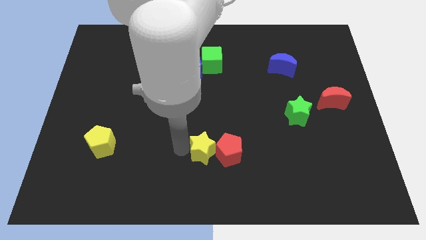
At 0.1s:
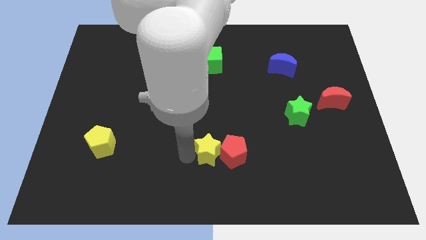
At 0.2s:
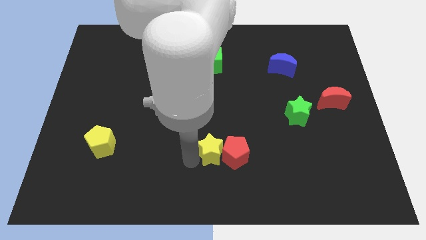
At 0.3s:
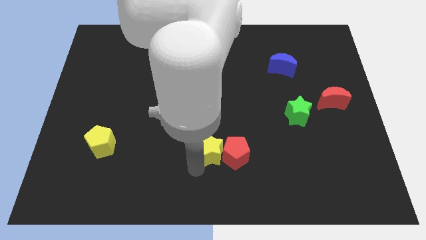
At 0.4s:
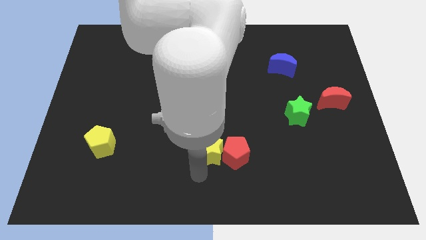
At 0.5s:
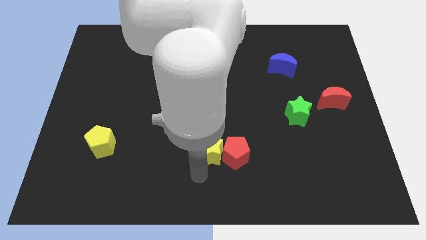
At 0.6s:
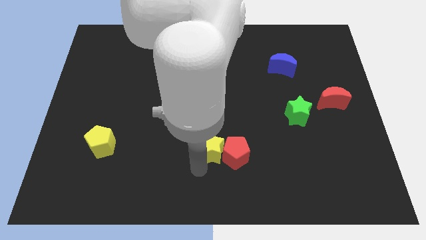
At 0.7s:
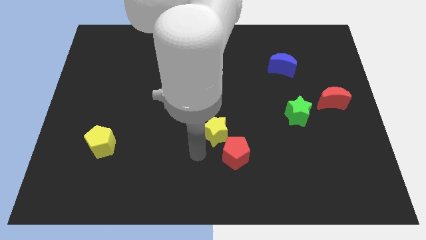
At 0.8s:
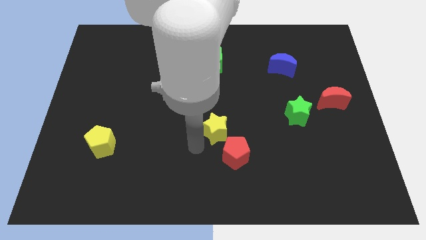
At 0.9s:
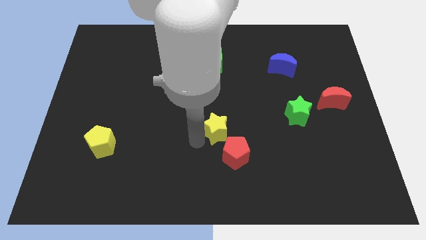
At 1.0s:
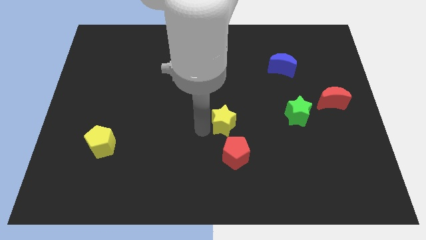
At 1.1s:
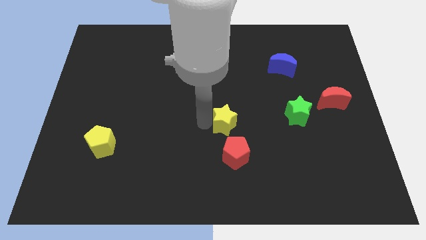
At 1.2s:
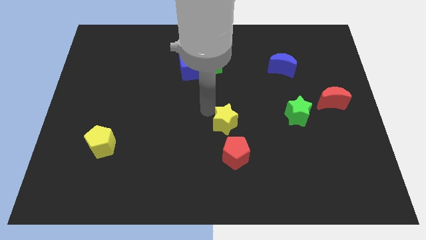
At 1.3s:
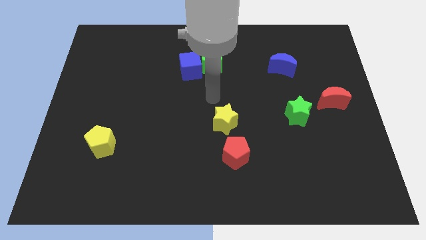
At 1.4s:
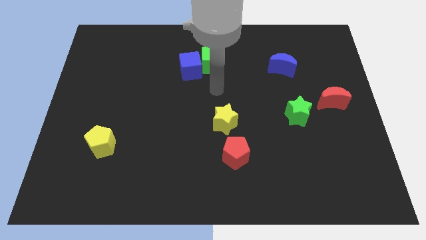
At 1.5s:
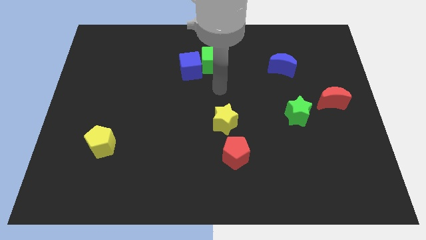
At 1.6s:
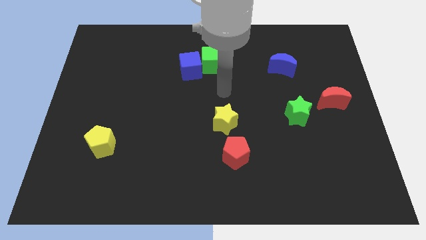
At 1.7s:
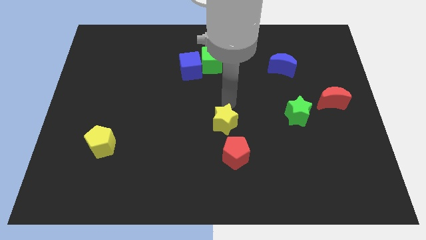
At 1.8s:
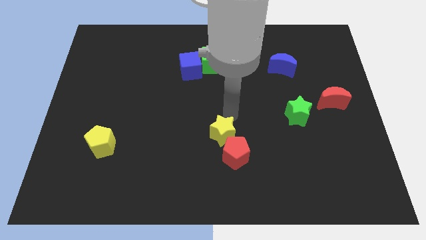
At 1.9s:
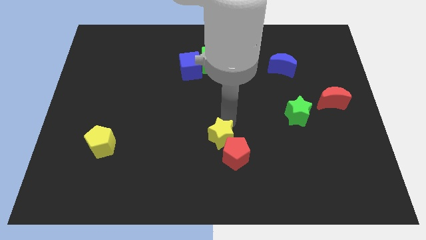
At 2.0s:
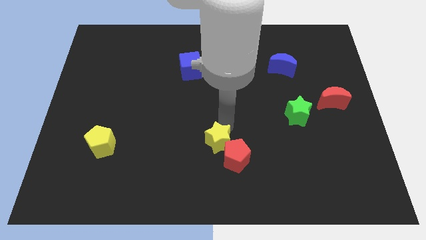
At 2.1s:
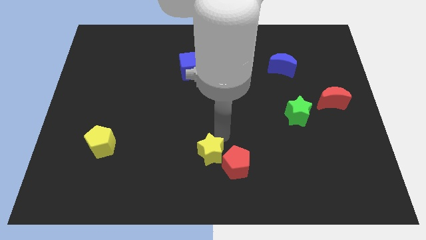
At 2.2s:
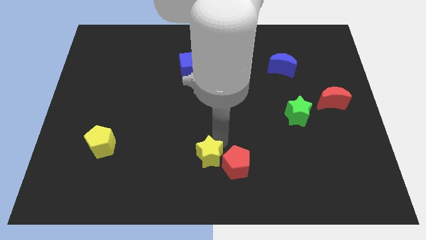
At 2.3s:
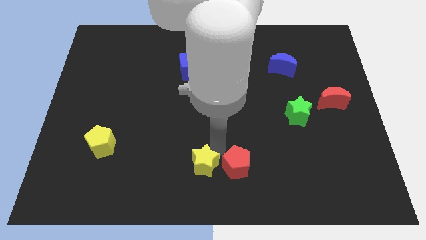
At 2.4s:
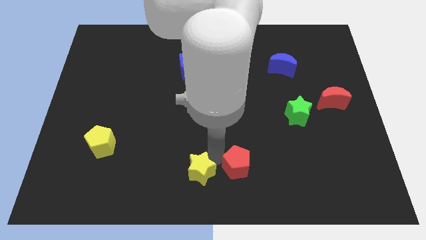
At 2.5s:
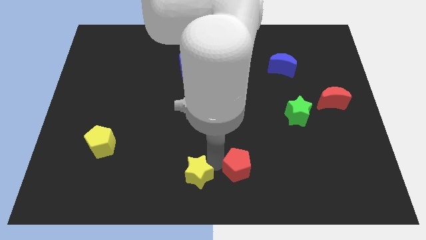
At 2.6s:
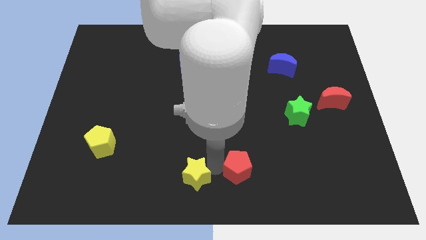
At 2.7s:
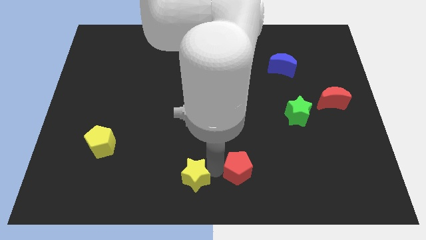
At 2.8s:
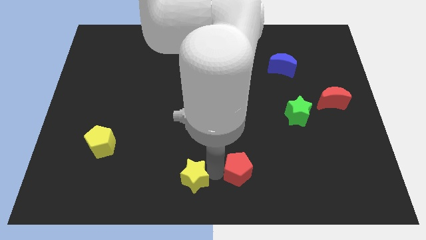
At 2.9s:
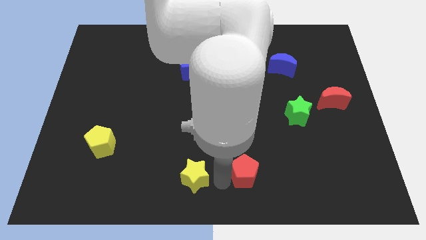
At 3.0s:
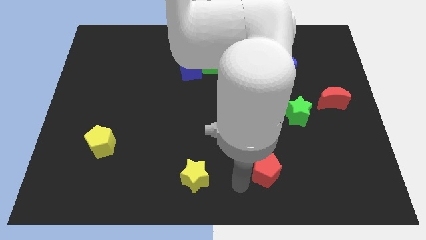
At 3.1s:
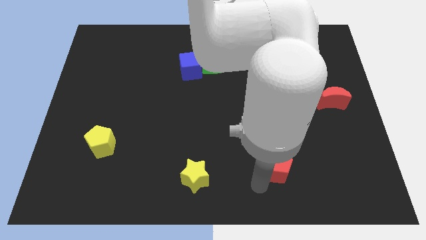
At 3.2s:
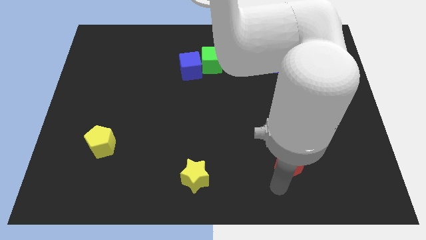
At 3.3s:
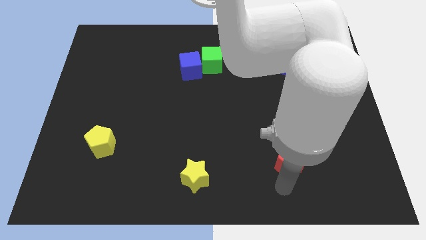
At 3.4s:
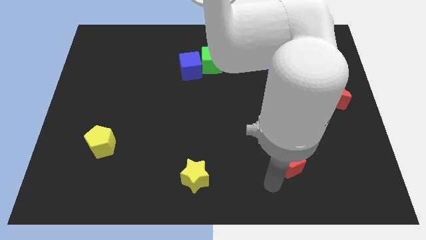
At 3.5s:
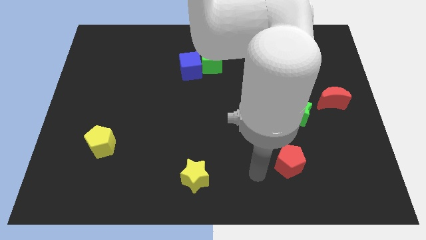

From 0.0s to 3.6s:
push the yellow star and red pentagon in different directions

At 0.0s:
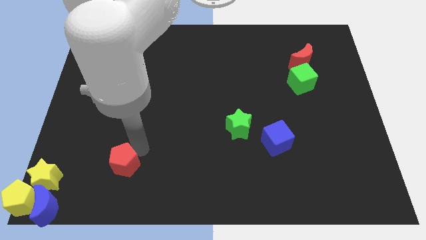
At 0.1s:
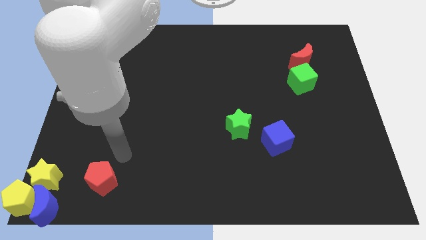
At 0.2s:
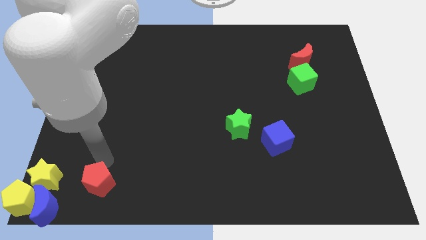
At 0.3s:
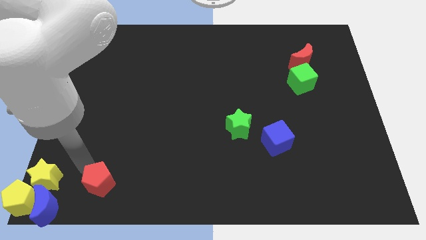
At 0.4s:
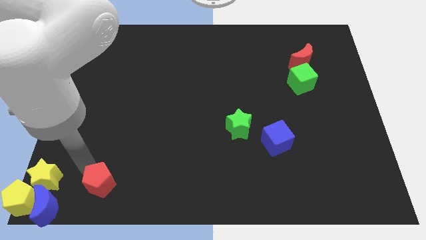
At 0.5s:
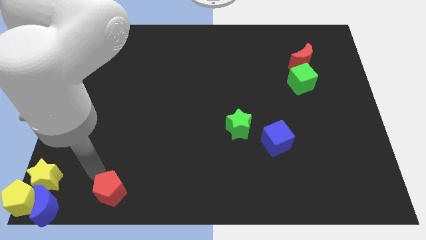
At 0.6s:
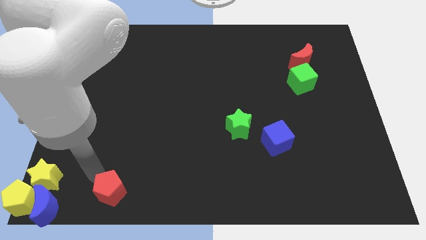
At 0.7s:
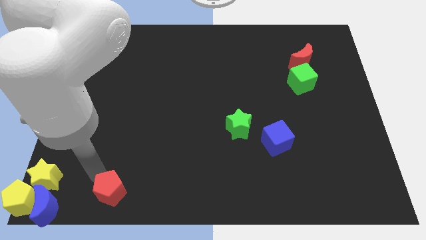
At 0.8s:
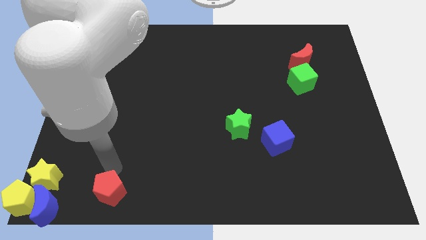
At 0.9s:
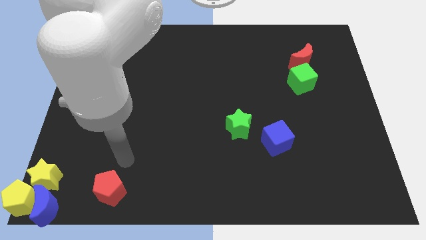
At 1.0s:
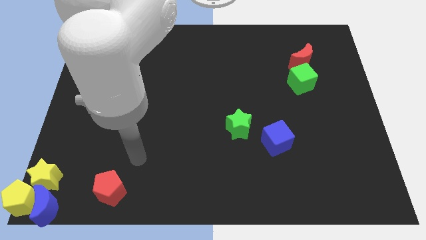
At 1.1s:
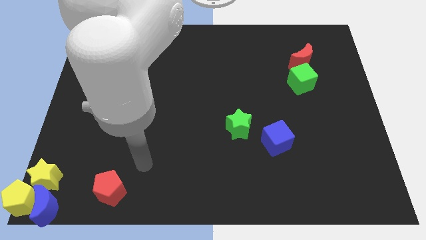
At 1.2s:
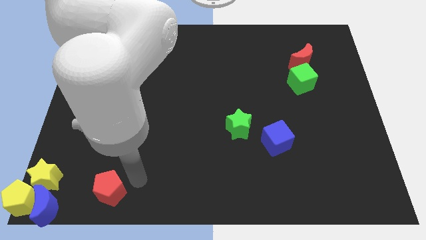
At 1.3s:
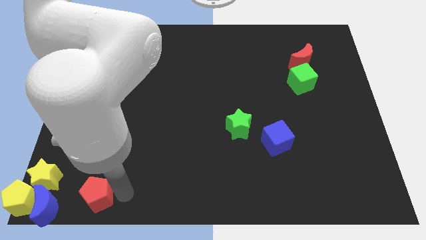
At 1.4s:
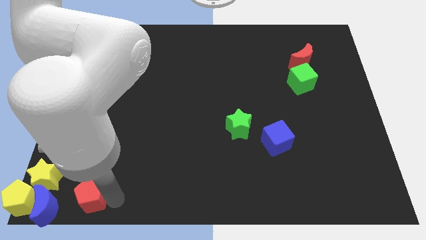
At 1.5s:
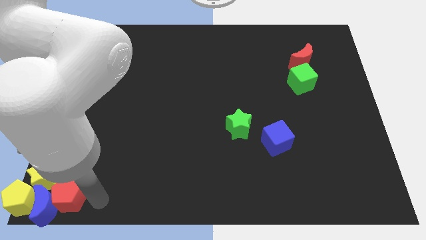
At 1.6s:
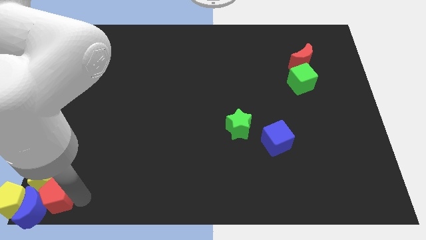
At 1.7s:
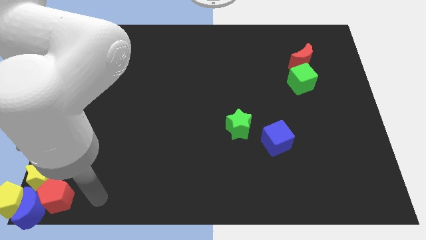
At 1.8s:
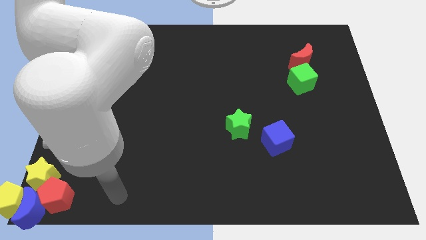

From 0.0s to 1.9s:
push the red pentagon into the blue crescent

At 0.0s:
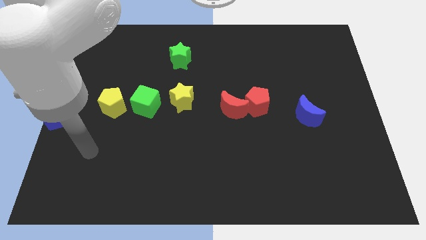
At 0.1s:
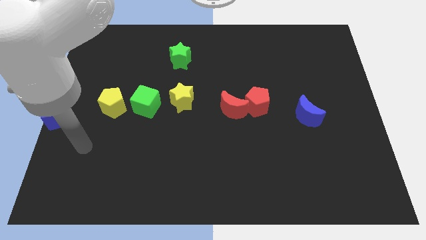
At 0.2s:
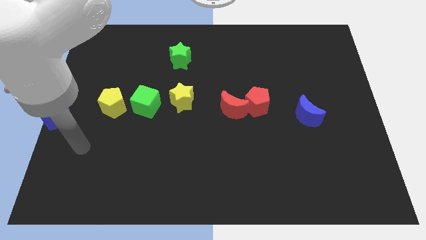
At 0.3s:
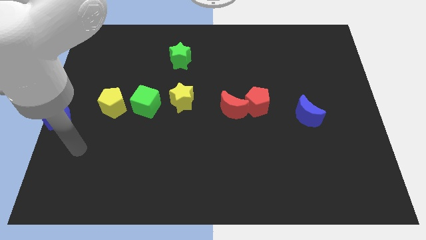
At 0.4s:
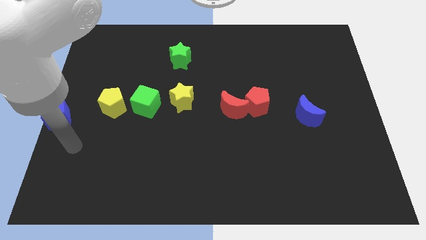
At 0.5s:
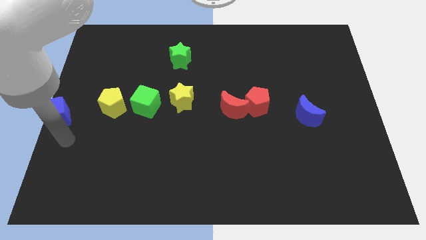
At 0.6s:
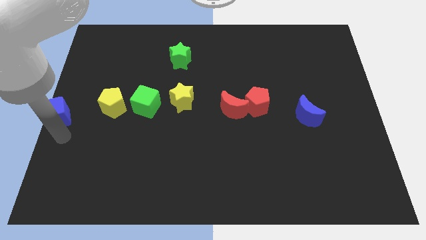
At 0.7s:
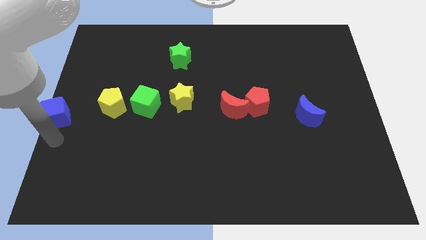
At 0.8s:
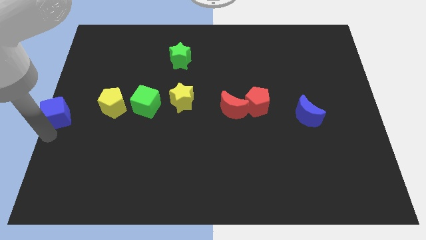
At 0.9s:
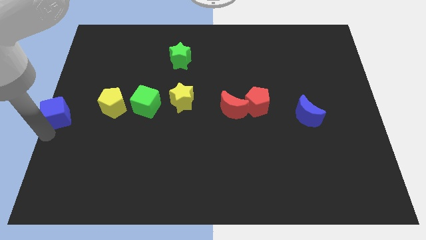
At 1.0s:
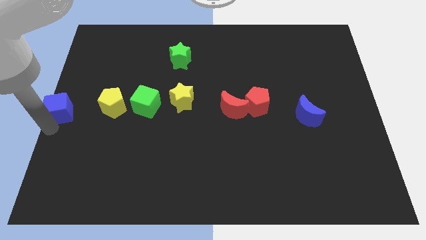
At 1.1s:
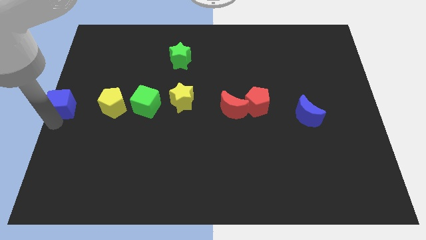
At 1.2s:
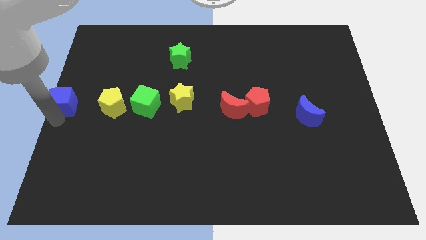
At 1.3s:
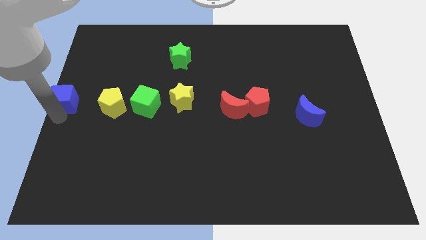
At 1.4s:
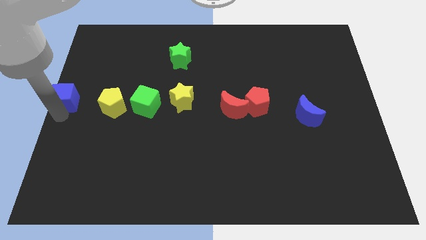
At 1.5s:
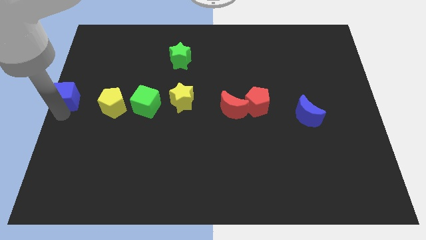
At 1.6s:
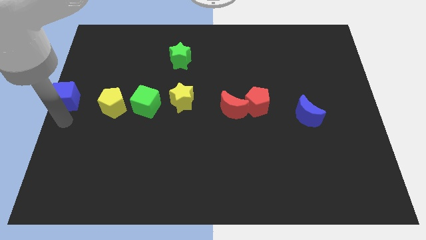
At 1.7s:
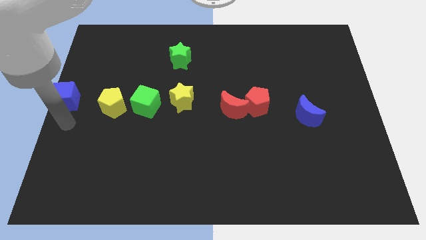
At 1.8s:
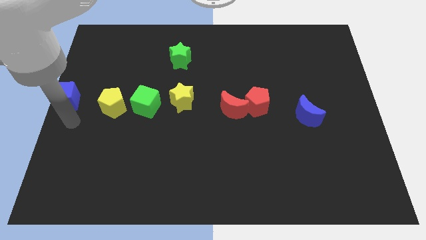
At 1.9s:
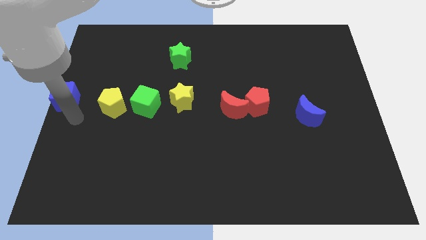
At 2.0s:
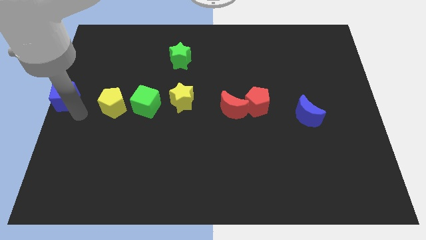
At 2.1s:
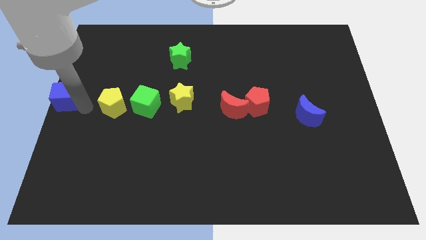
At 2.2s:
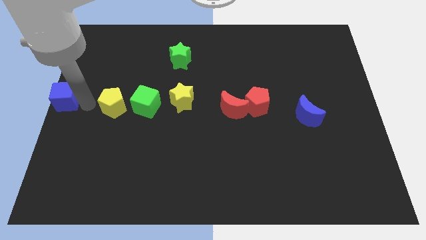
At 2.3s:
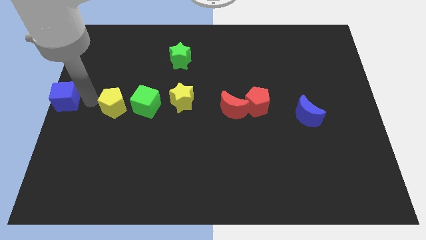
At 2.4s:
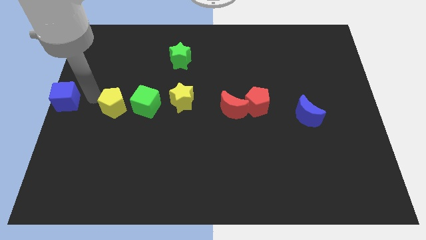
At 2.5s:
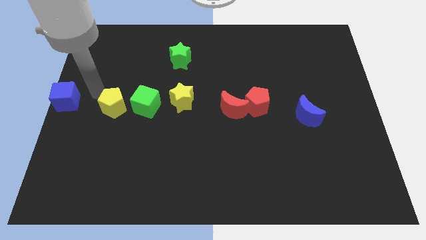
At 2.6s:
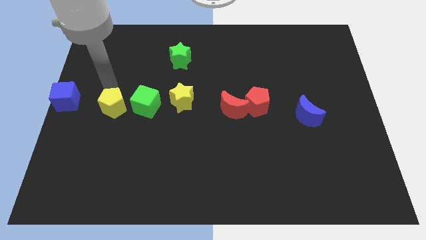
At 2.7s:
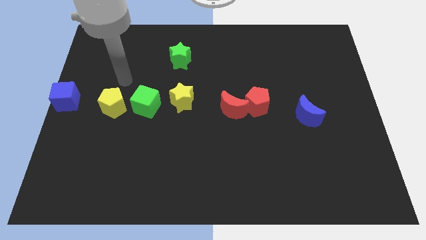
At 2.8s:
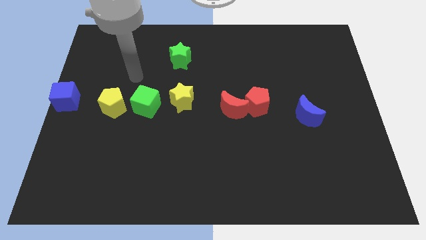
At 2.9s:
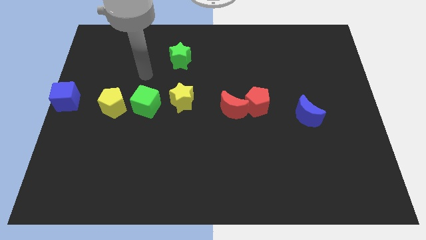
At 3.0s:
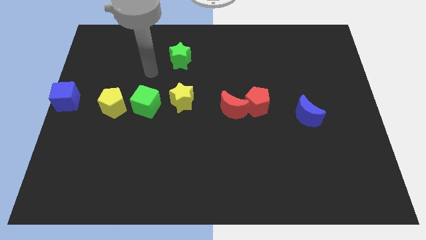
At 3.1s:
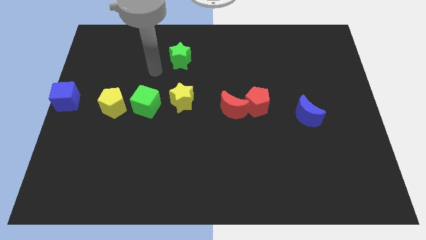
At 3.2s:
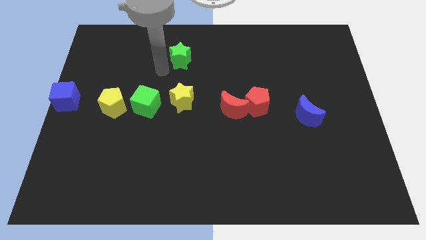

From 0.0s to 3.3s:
move the blue cube parallel to the yellow pentagon
